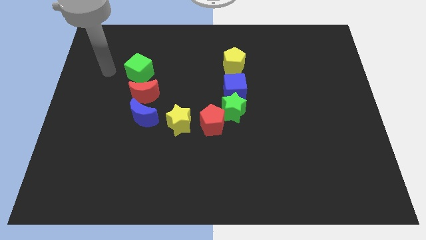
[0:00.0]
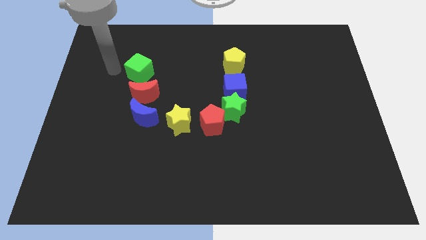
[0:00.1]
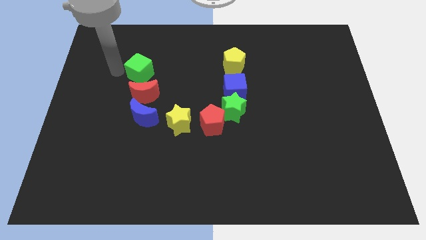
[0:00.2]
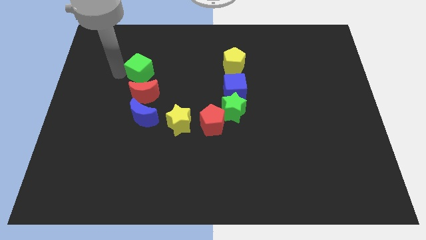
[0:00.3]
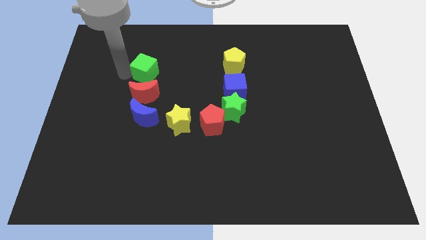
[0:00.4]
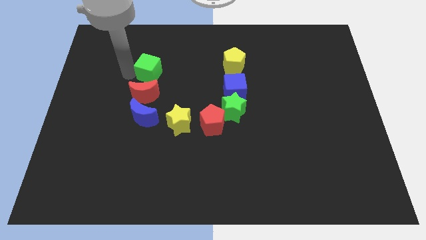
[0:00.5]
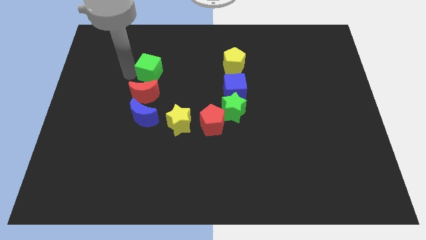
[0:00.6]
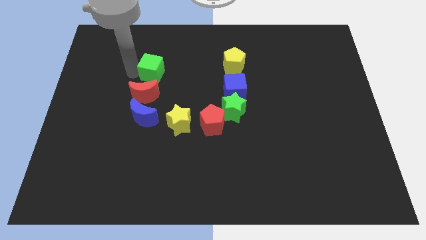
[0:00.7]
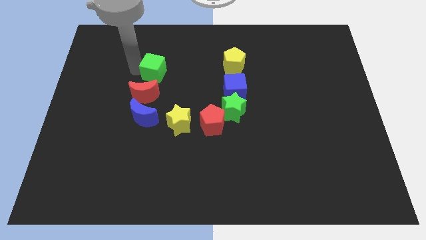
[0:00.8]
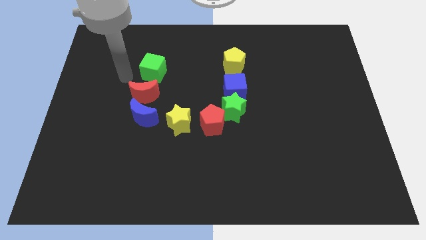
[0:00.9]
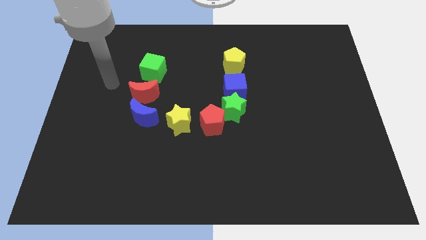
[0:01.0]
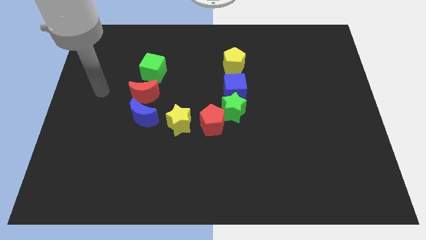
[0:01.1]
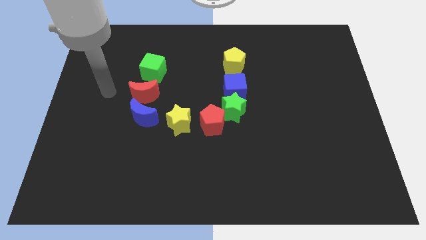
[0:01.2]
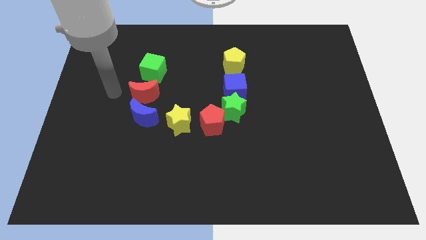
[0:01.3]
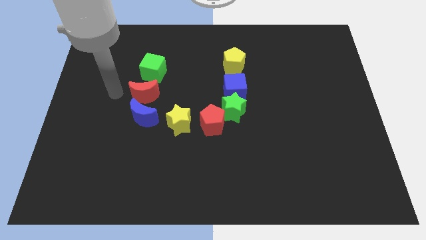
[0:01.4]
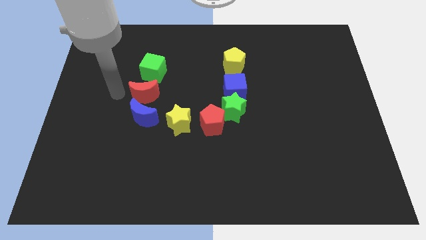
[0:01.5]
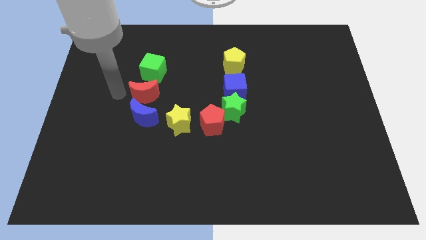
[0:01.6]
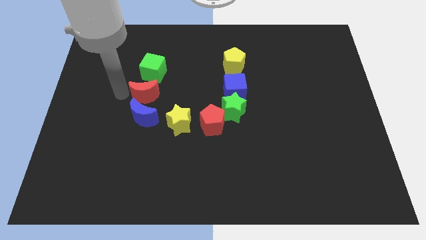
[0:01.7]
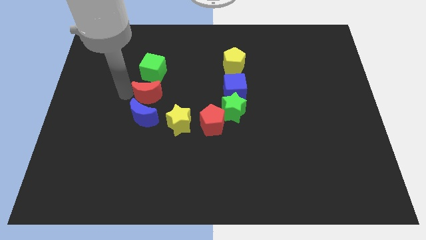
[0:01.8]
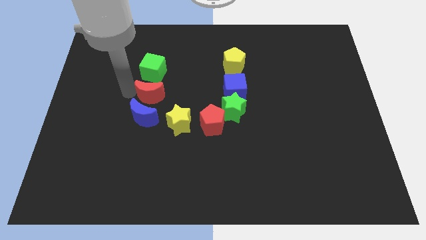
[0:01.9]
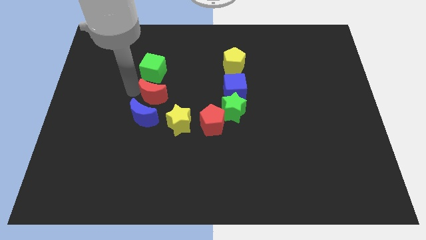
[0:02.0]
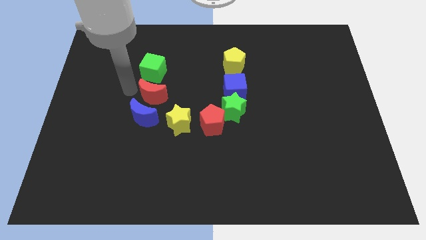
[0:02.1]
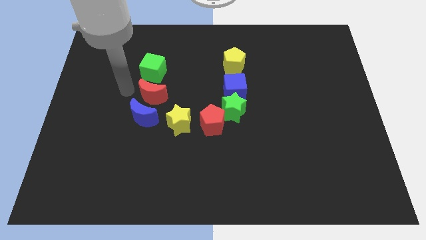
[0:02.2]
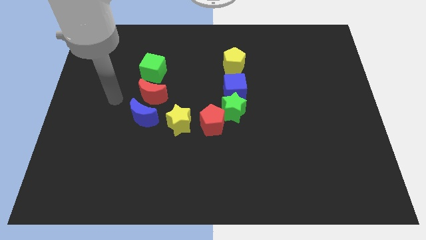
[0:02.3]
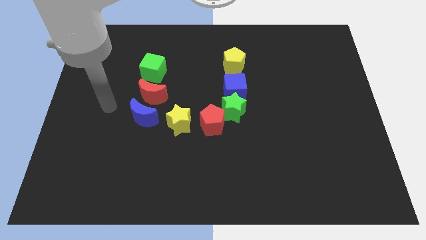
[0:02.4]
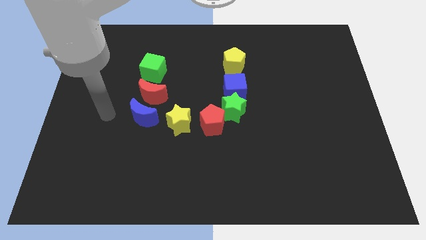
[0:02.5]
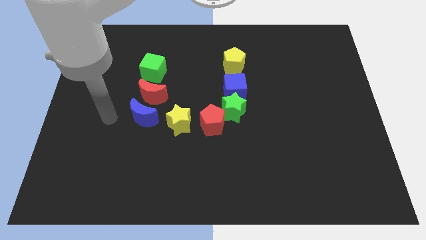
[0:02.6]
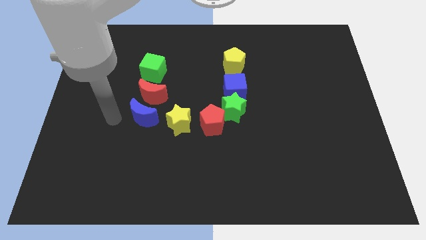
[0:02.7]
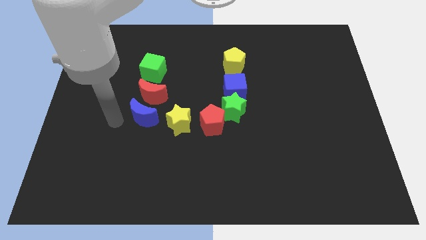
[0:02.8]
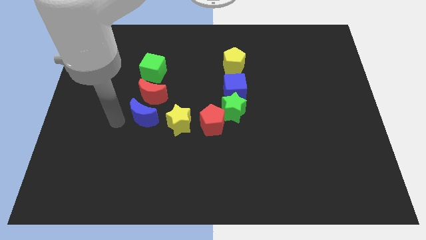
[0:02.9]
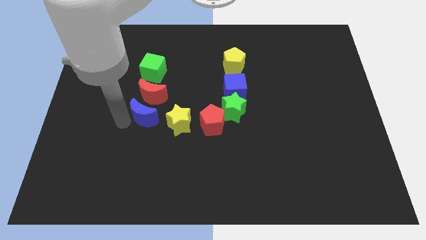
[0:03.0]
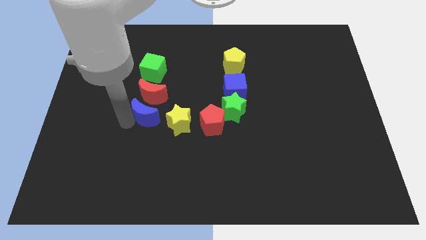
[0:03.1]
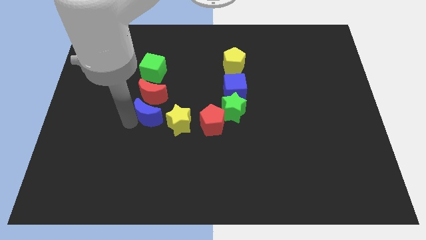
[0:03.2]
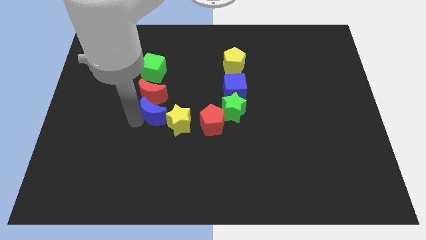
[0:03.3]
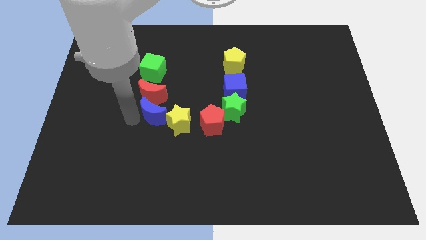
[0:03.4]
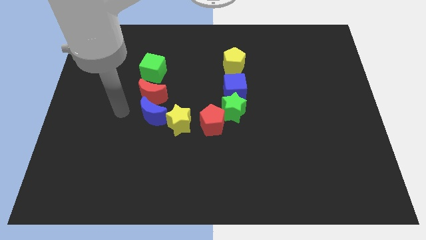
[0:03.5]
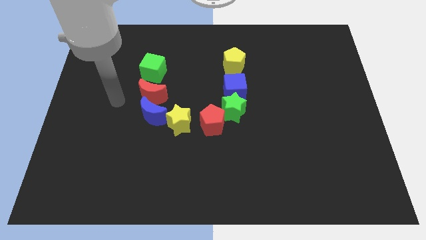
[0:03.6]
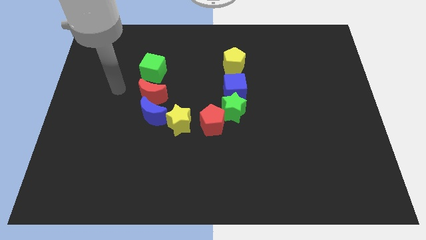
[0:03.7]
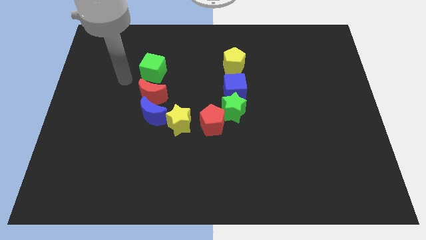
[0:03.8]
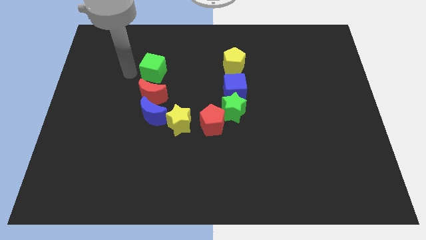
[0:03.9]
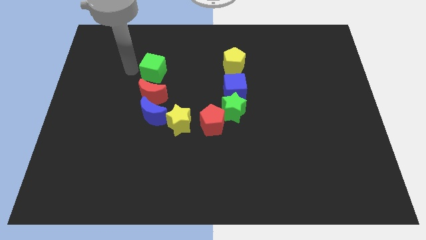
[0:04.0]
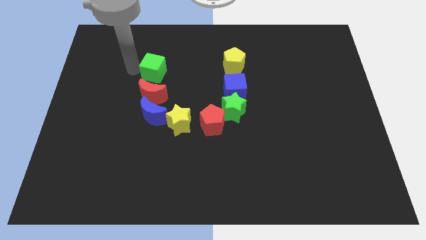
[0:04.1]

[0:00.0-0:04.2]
slightly push the green cubered moon and the blue moon towards right

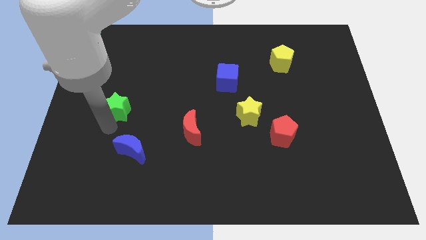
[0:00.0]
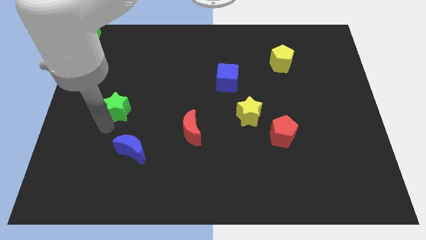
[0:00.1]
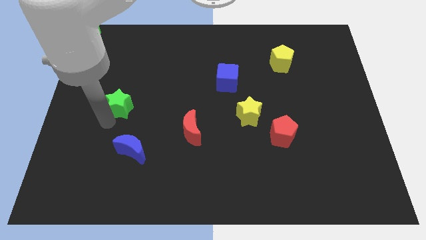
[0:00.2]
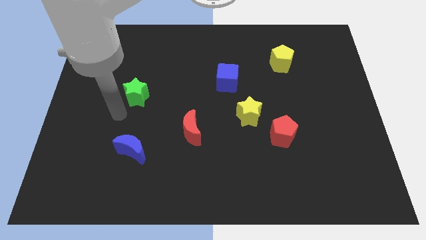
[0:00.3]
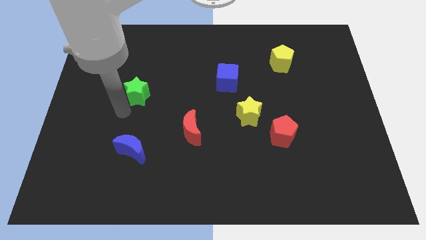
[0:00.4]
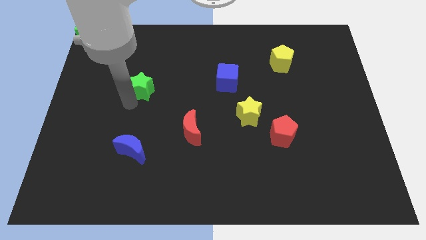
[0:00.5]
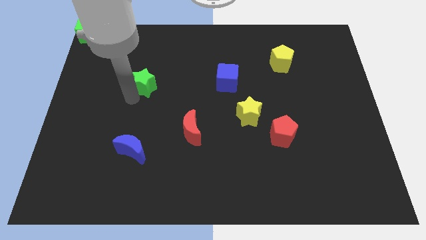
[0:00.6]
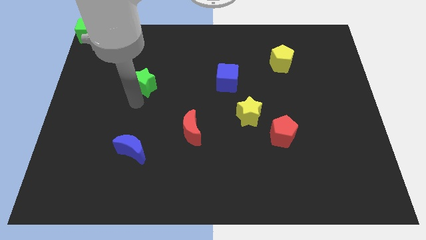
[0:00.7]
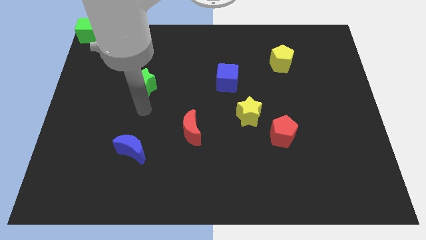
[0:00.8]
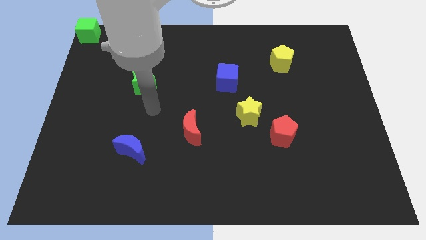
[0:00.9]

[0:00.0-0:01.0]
place the green star left to the blue cube

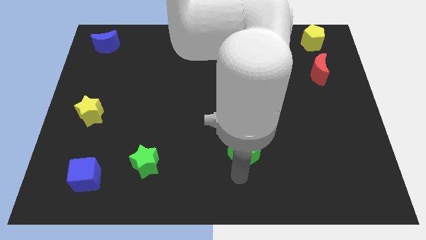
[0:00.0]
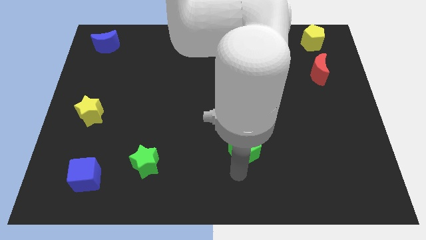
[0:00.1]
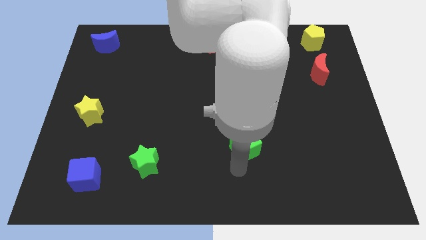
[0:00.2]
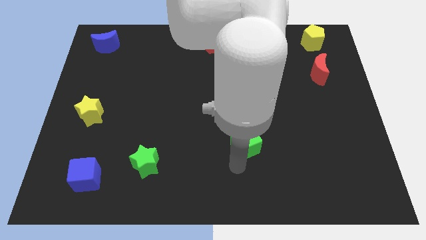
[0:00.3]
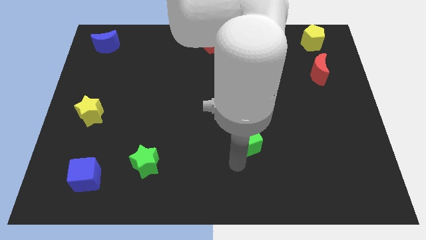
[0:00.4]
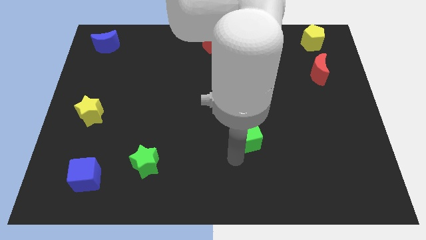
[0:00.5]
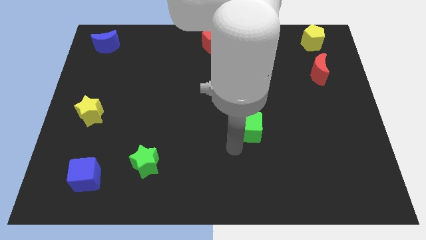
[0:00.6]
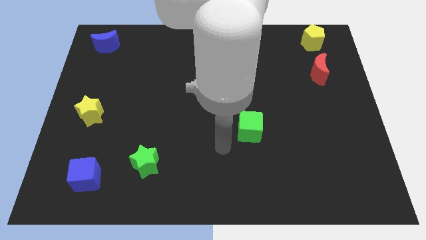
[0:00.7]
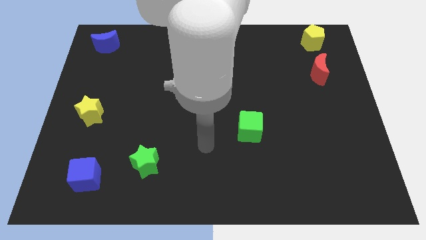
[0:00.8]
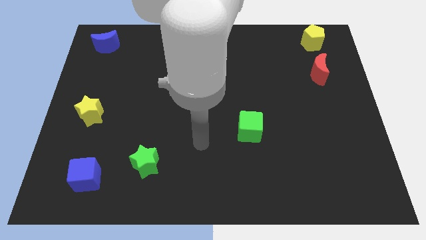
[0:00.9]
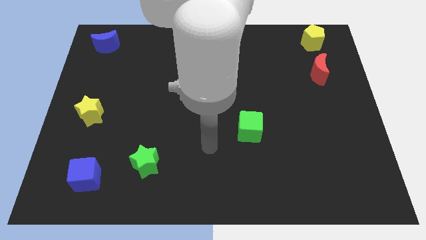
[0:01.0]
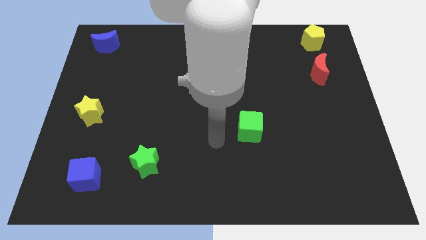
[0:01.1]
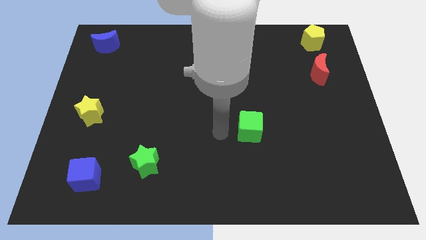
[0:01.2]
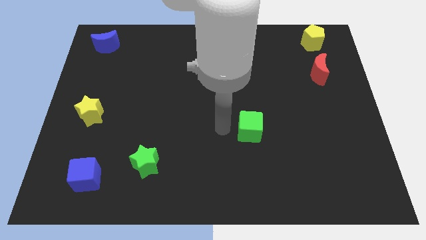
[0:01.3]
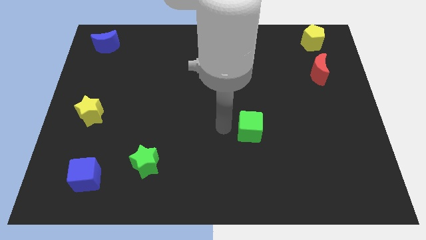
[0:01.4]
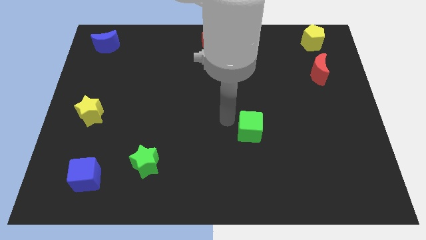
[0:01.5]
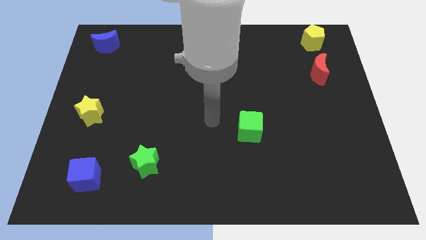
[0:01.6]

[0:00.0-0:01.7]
move the green cube to the top of the board

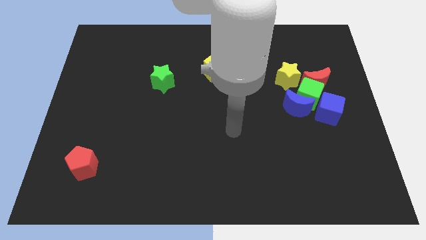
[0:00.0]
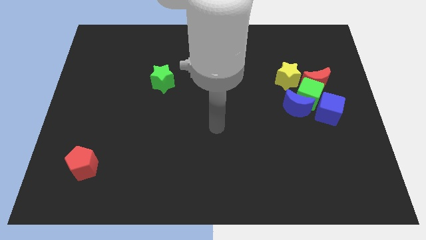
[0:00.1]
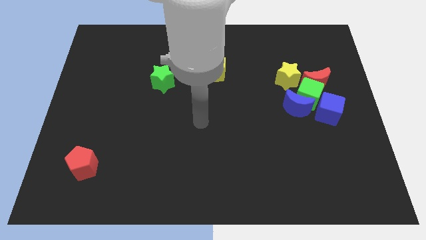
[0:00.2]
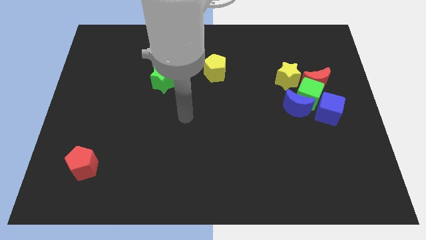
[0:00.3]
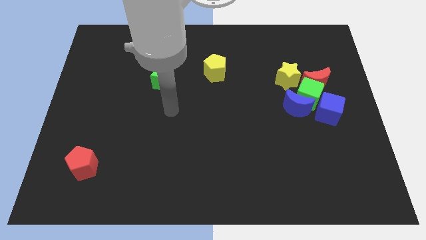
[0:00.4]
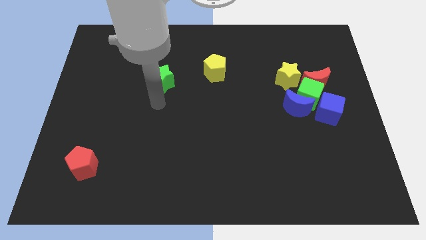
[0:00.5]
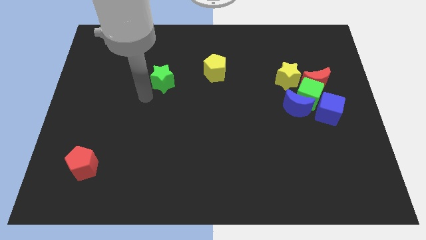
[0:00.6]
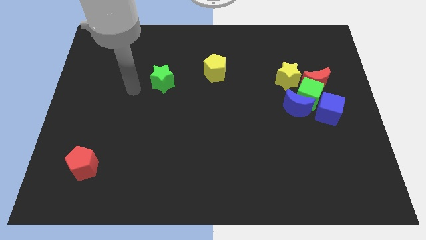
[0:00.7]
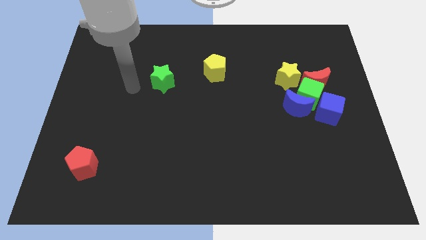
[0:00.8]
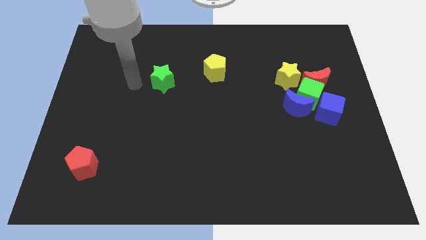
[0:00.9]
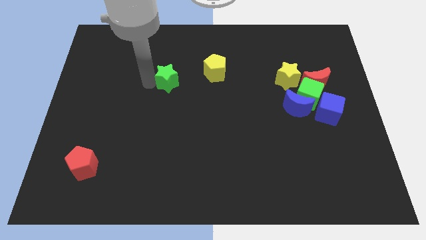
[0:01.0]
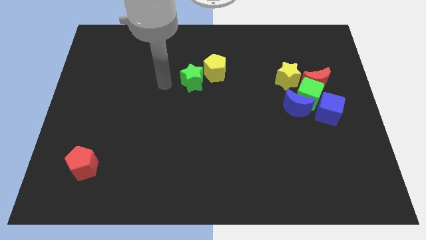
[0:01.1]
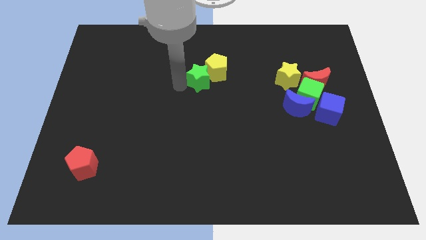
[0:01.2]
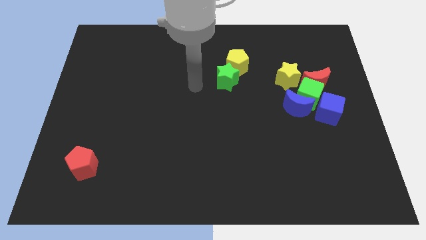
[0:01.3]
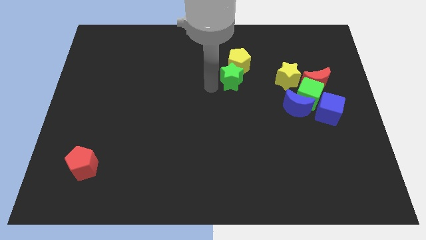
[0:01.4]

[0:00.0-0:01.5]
place the green star below the yellowpentagon

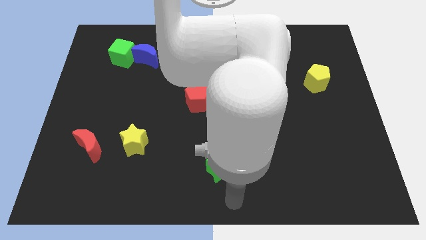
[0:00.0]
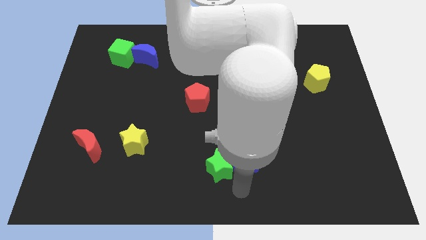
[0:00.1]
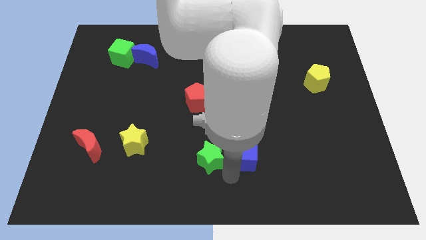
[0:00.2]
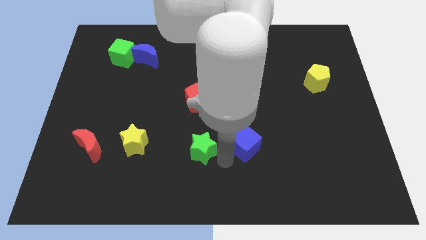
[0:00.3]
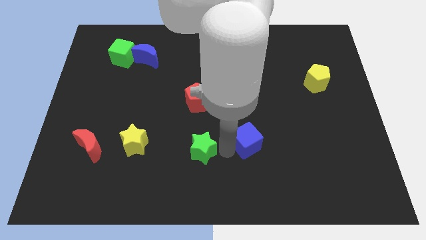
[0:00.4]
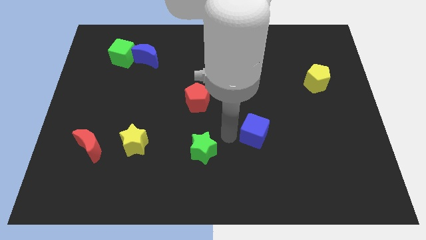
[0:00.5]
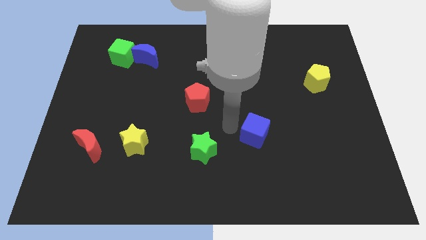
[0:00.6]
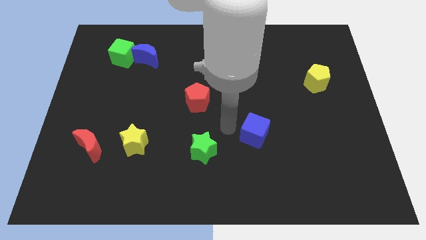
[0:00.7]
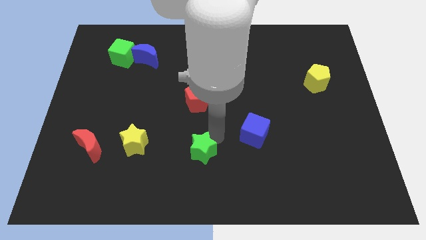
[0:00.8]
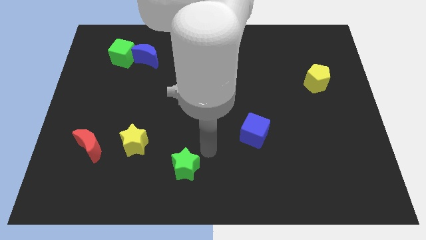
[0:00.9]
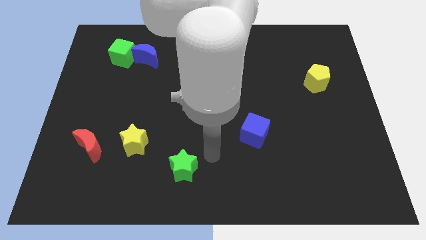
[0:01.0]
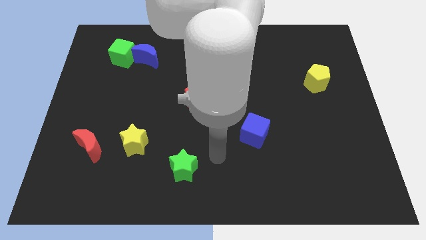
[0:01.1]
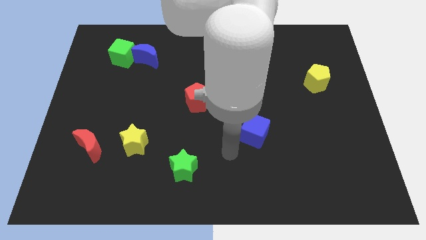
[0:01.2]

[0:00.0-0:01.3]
separate green star from the blue cube
